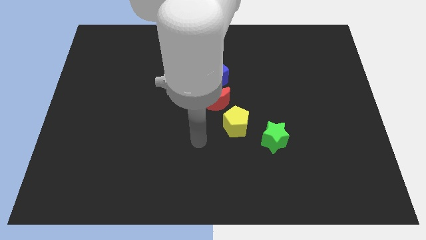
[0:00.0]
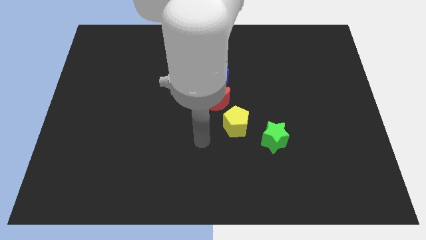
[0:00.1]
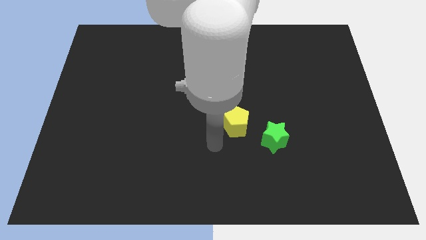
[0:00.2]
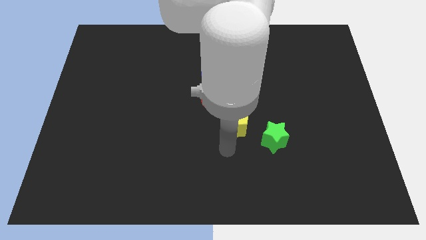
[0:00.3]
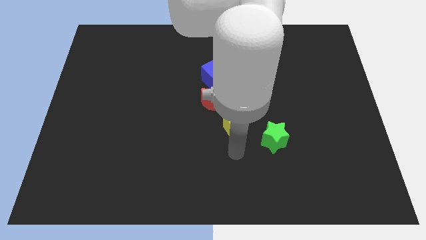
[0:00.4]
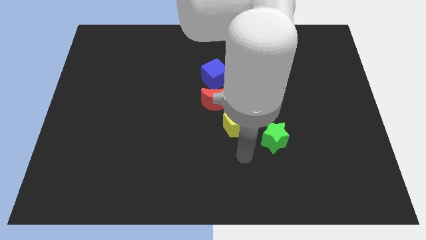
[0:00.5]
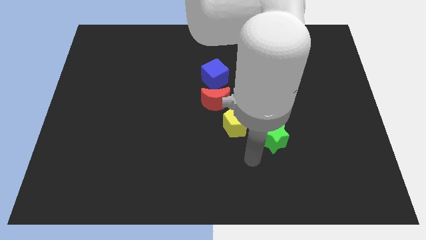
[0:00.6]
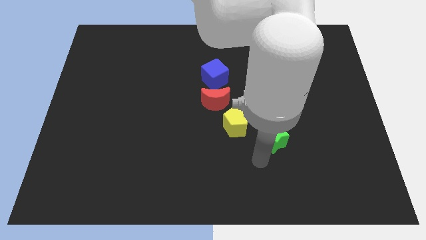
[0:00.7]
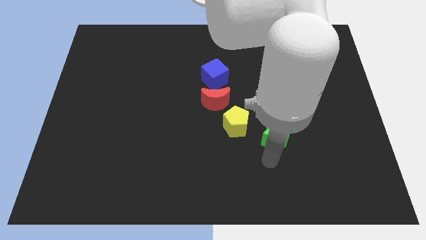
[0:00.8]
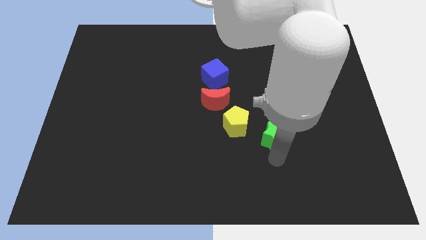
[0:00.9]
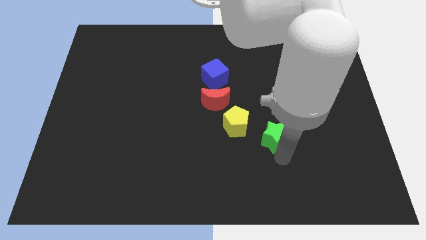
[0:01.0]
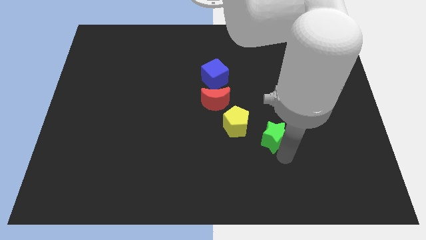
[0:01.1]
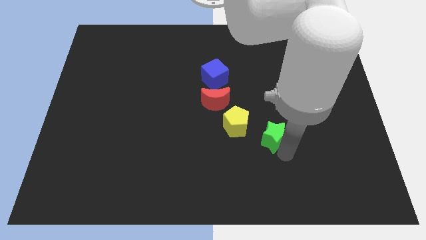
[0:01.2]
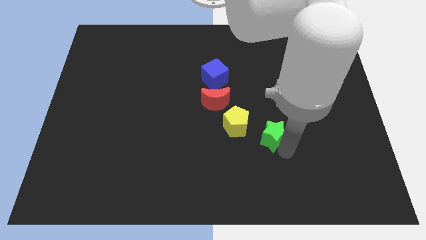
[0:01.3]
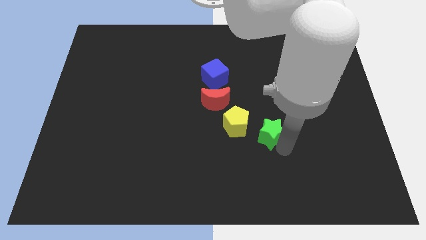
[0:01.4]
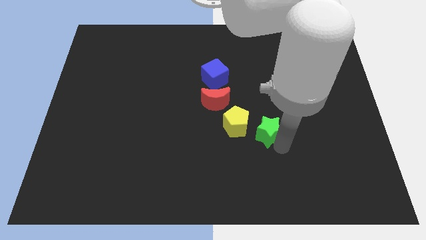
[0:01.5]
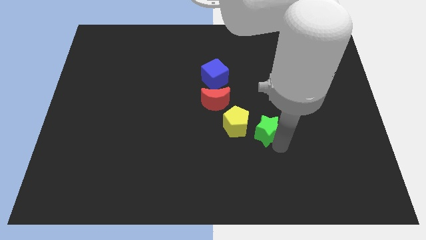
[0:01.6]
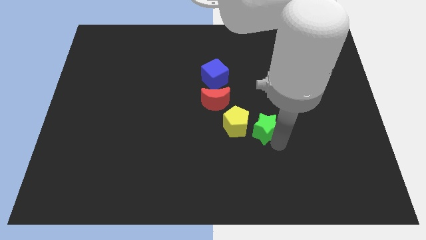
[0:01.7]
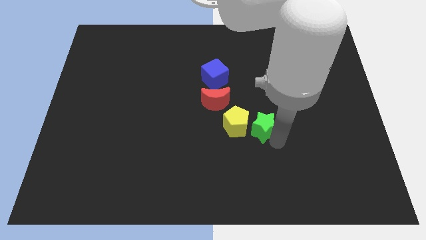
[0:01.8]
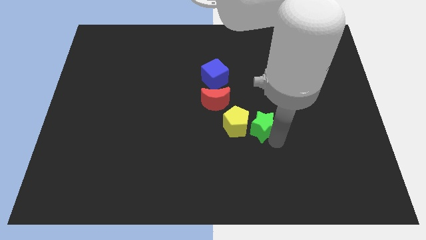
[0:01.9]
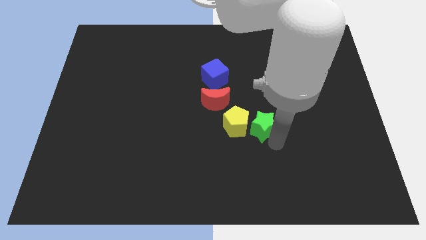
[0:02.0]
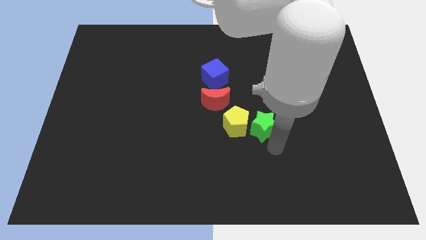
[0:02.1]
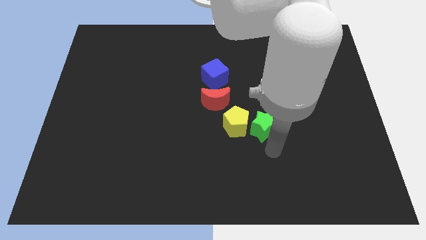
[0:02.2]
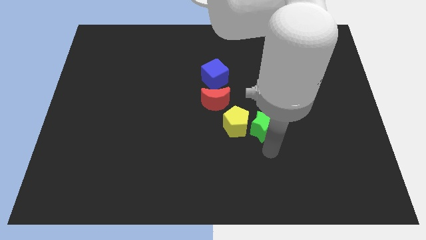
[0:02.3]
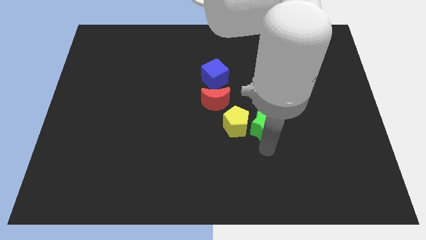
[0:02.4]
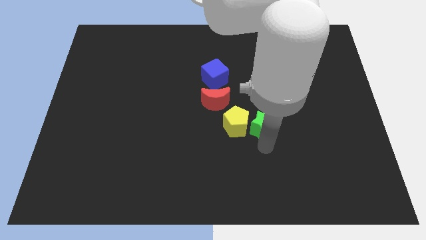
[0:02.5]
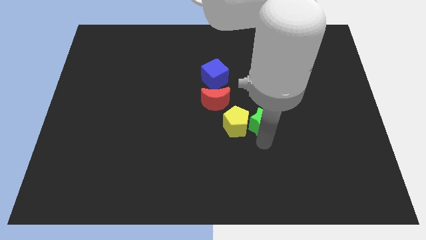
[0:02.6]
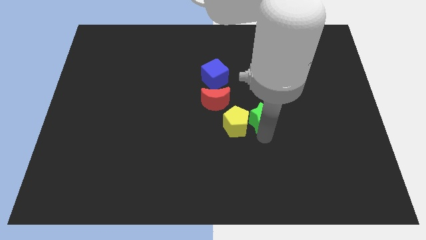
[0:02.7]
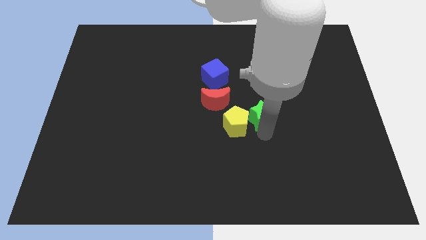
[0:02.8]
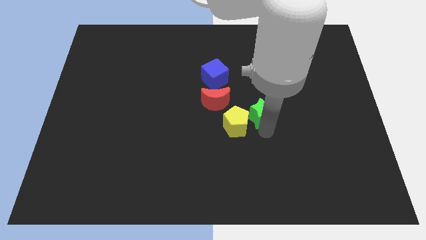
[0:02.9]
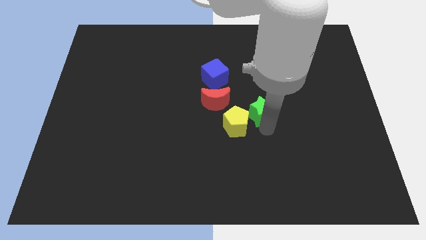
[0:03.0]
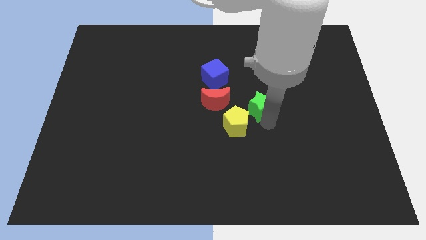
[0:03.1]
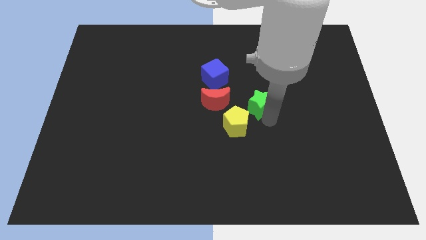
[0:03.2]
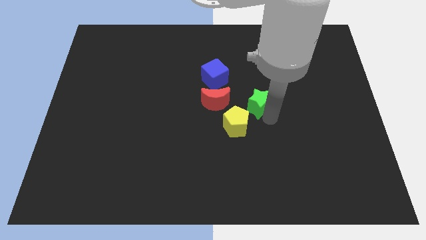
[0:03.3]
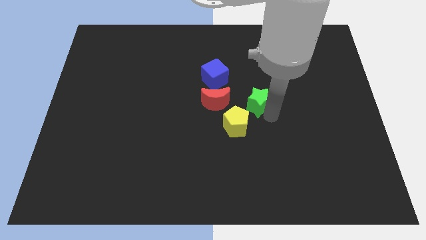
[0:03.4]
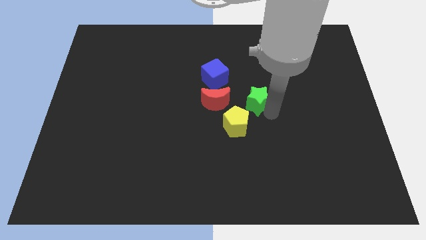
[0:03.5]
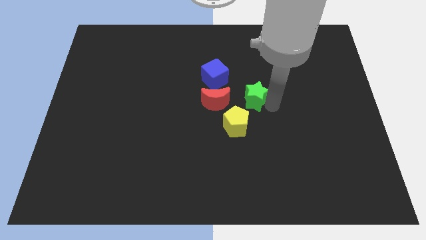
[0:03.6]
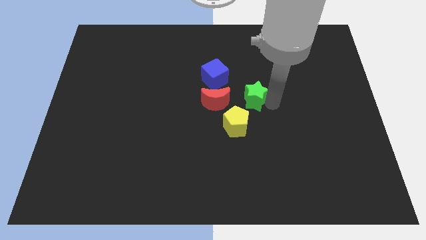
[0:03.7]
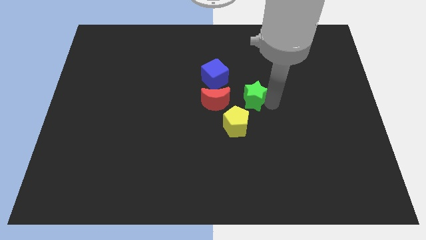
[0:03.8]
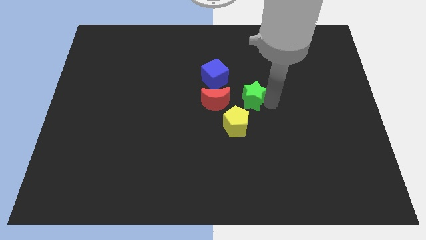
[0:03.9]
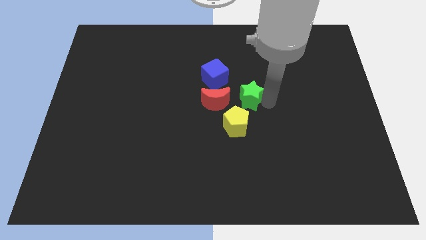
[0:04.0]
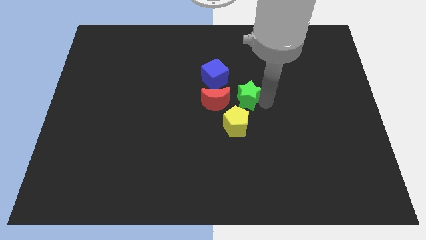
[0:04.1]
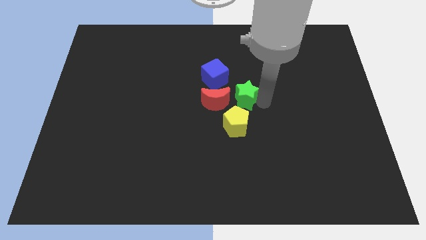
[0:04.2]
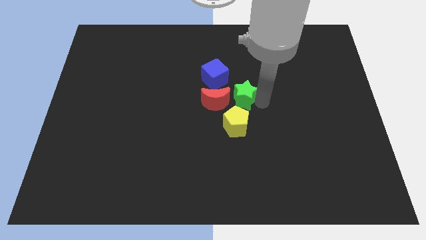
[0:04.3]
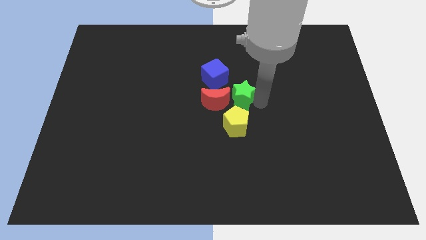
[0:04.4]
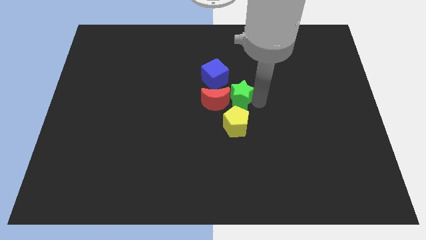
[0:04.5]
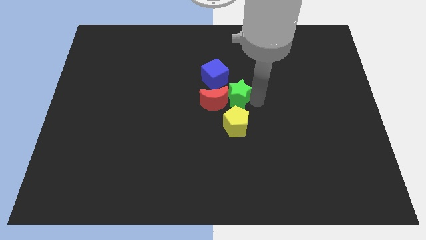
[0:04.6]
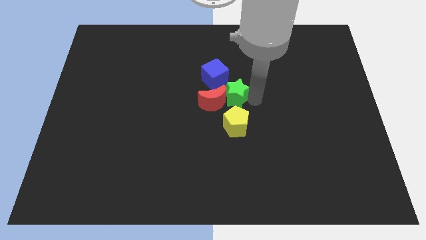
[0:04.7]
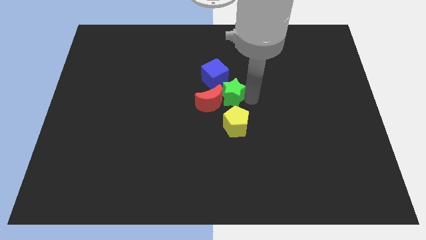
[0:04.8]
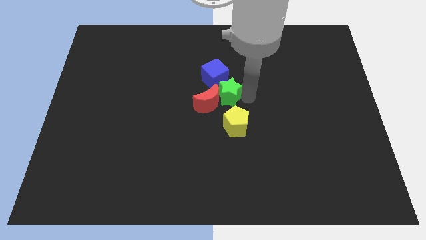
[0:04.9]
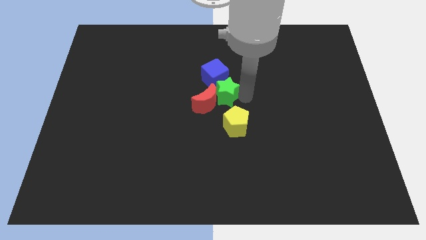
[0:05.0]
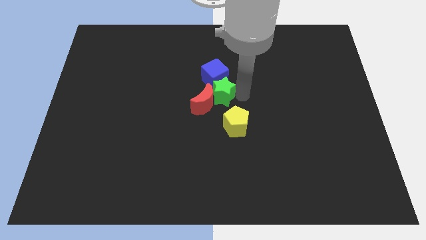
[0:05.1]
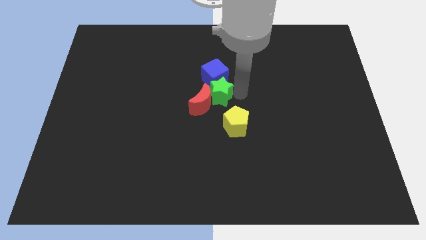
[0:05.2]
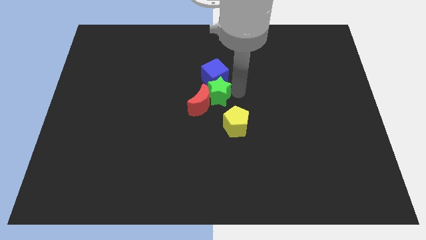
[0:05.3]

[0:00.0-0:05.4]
push the green block towards the blue cube

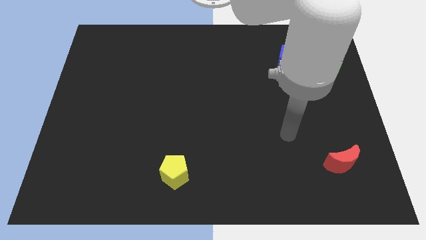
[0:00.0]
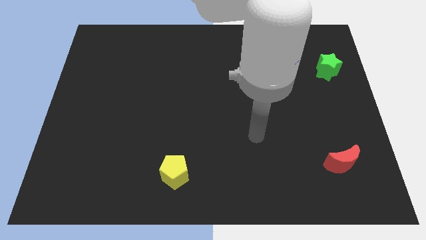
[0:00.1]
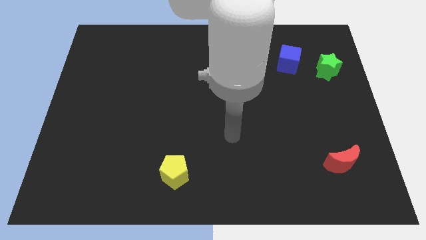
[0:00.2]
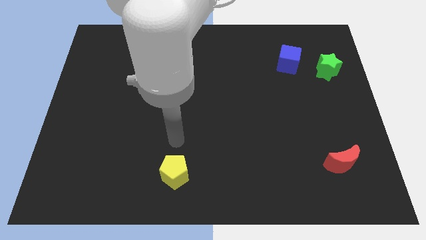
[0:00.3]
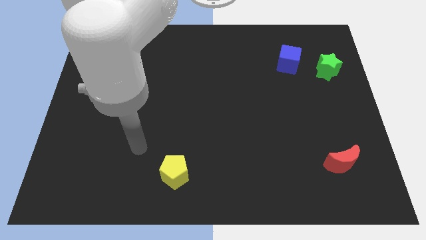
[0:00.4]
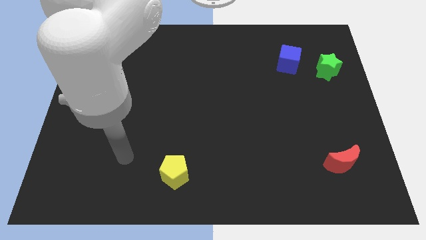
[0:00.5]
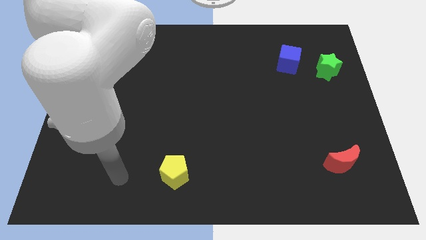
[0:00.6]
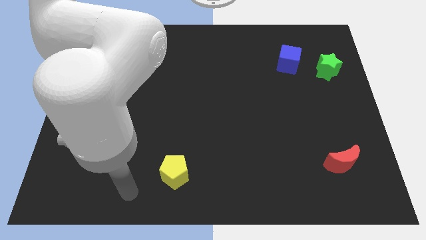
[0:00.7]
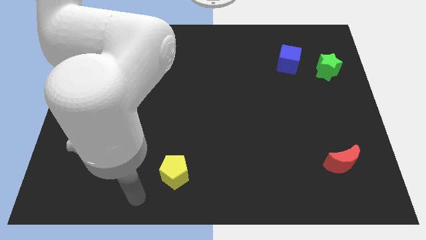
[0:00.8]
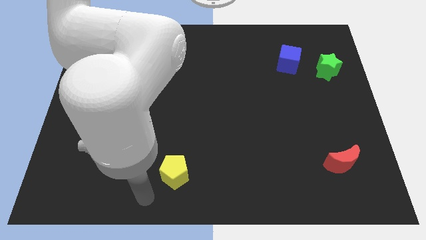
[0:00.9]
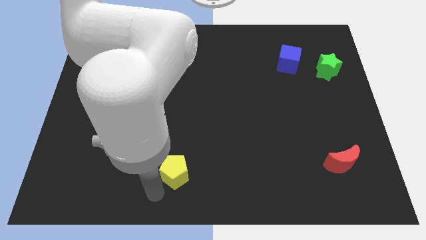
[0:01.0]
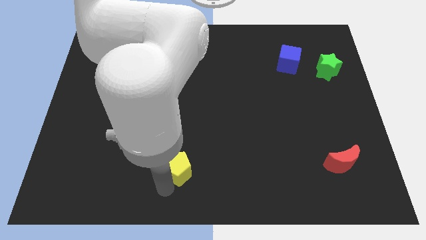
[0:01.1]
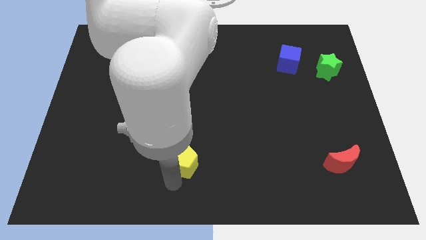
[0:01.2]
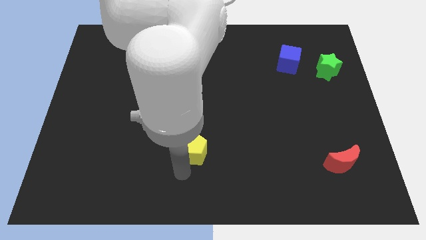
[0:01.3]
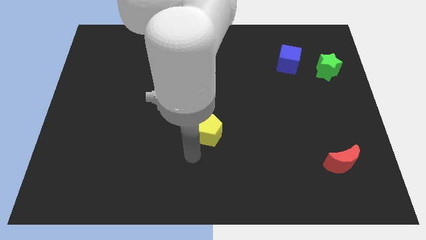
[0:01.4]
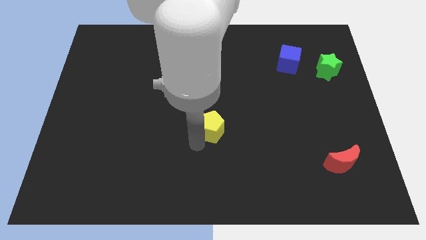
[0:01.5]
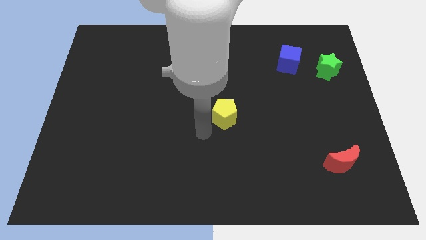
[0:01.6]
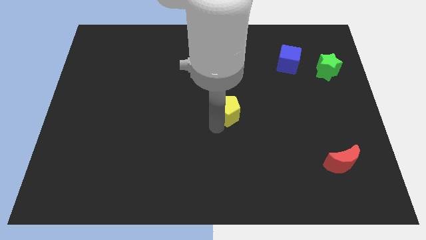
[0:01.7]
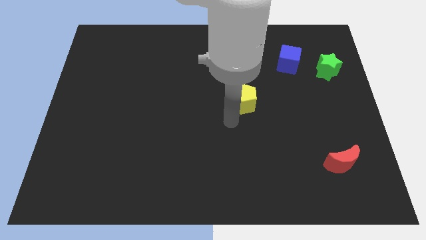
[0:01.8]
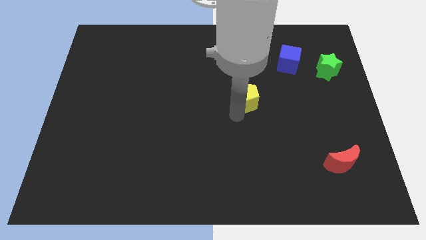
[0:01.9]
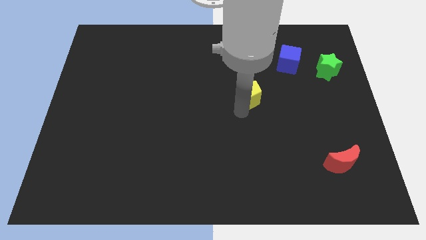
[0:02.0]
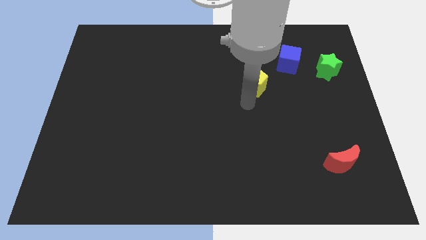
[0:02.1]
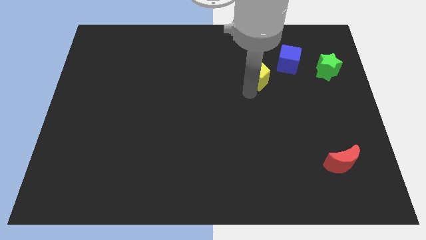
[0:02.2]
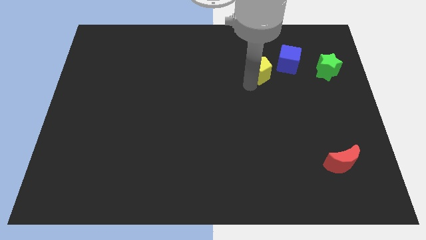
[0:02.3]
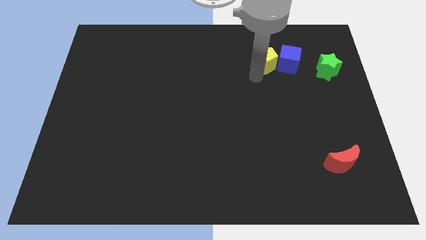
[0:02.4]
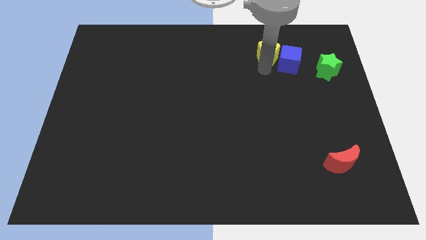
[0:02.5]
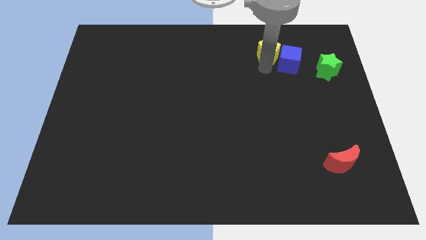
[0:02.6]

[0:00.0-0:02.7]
put the yellow block to the cube

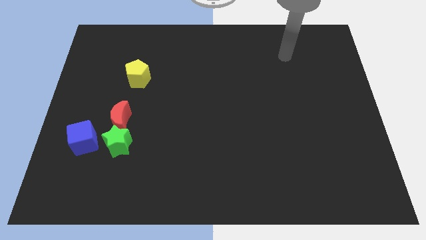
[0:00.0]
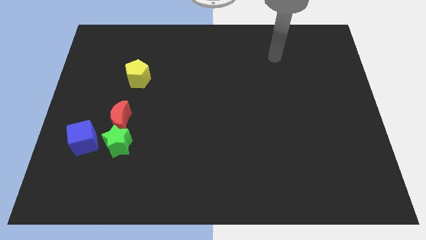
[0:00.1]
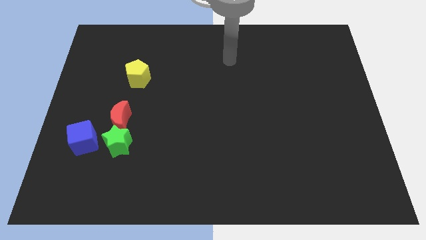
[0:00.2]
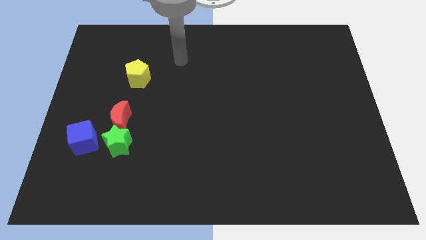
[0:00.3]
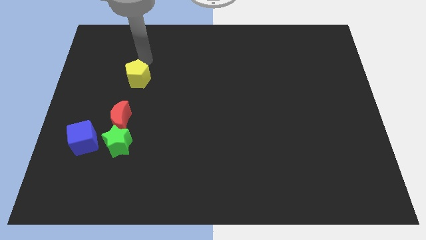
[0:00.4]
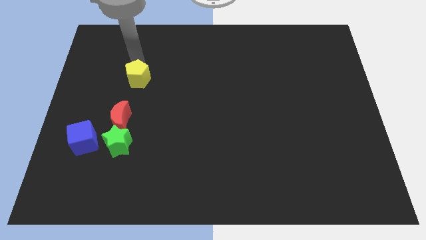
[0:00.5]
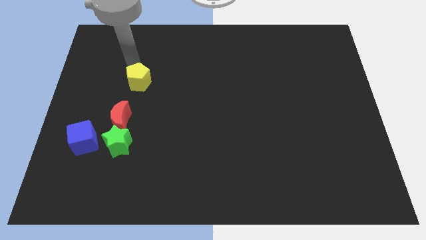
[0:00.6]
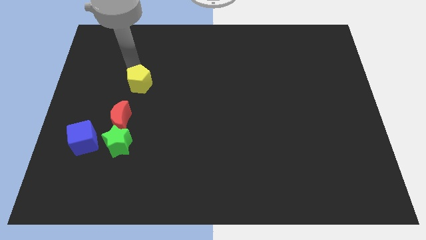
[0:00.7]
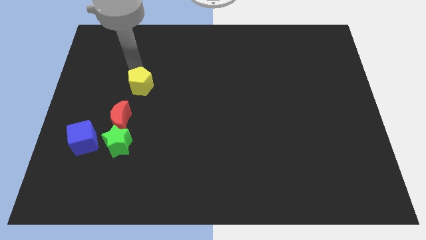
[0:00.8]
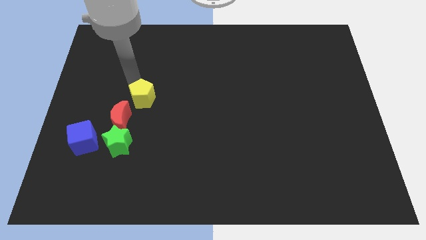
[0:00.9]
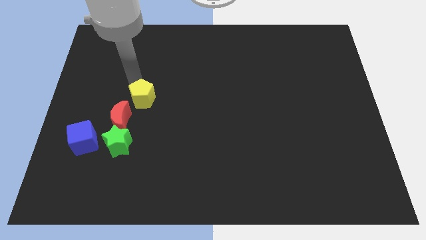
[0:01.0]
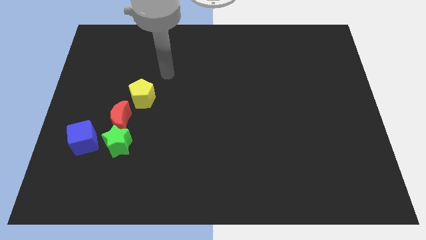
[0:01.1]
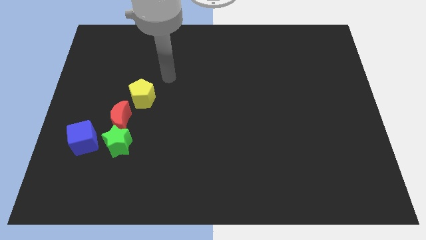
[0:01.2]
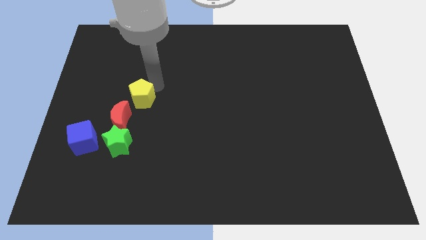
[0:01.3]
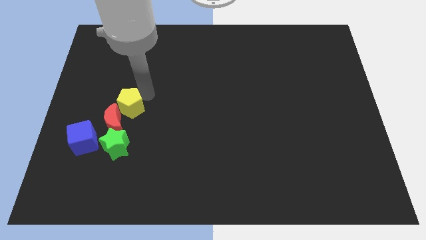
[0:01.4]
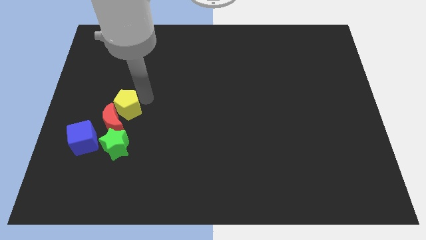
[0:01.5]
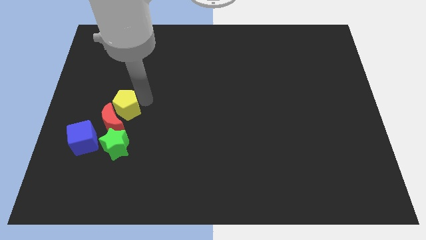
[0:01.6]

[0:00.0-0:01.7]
move the yellow pentagon towards the moon
